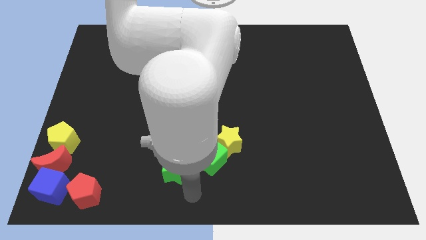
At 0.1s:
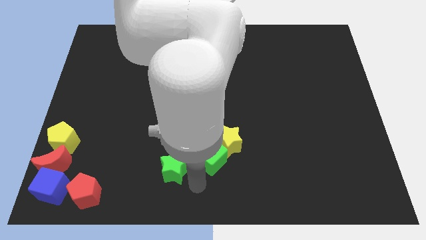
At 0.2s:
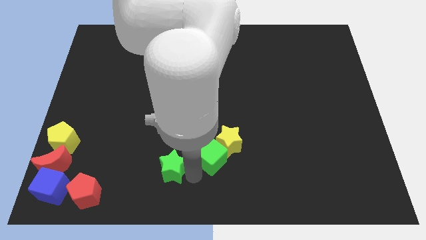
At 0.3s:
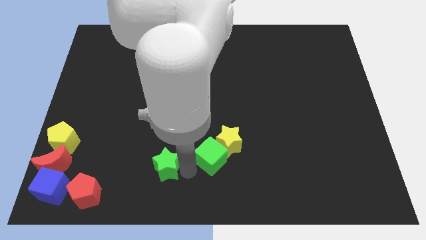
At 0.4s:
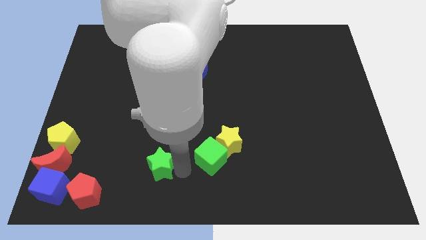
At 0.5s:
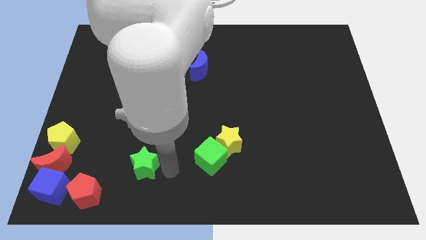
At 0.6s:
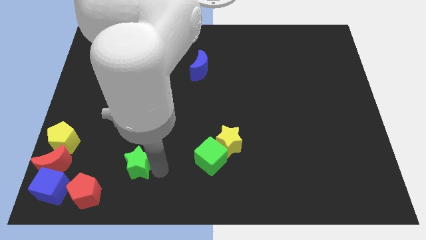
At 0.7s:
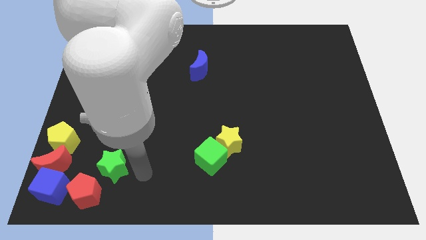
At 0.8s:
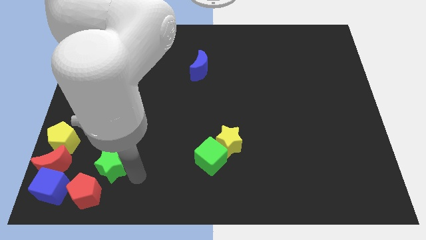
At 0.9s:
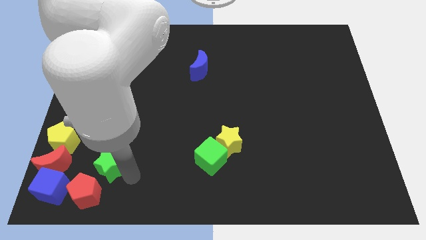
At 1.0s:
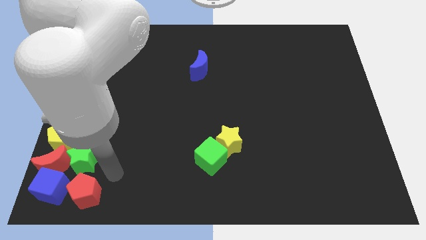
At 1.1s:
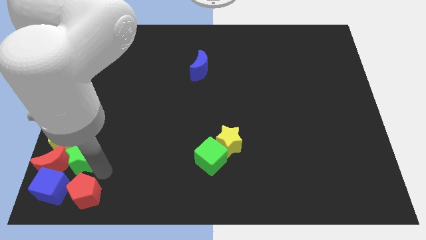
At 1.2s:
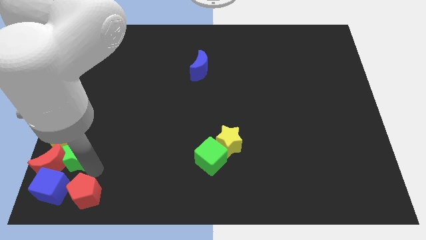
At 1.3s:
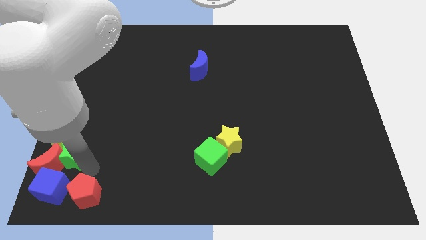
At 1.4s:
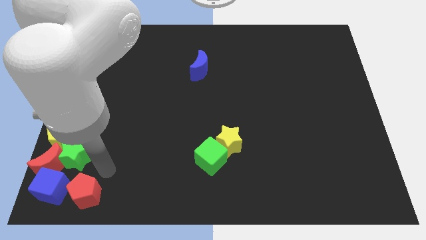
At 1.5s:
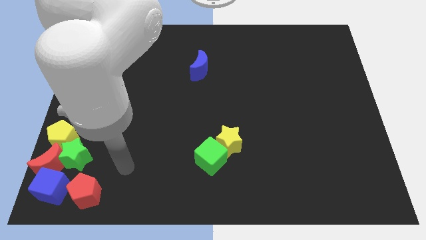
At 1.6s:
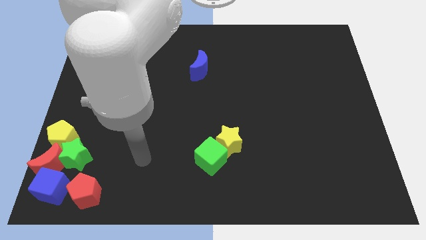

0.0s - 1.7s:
move green star into the red crescent

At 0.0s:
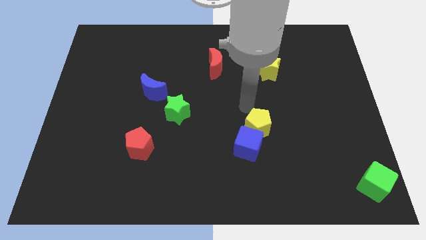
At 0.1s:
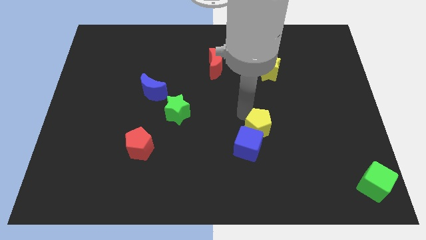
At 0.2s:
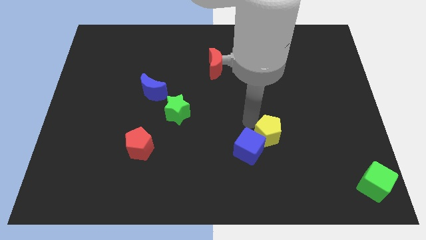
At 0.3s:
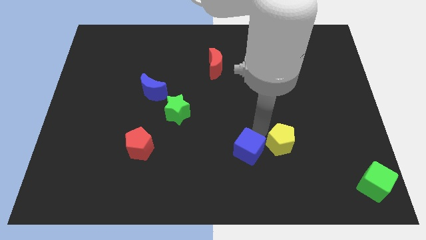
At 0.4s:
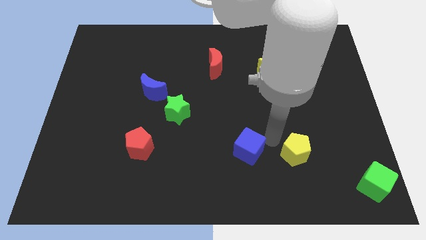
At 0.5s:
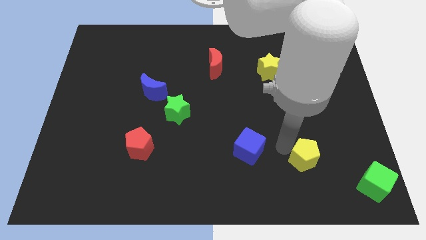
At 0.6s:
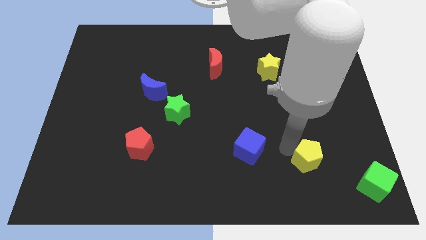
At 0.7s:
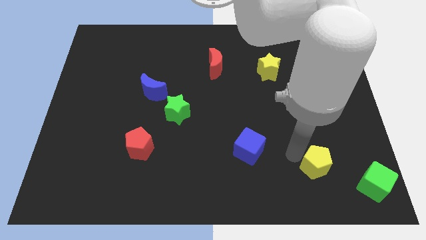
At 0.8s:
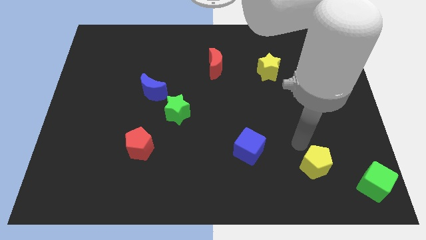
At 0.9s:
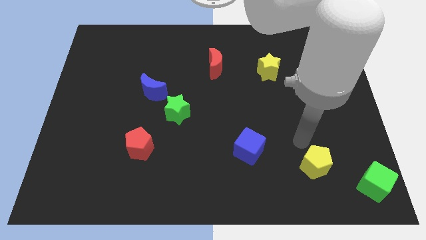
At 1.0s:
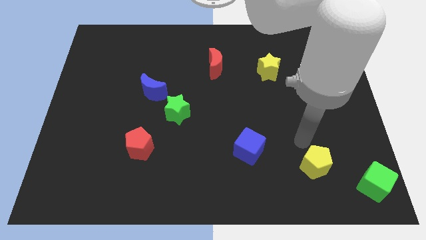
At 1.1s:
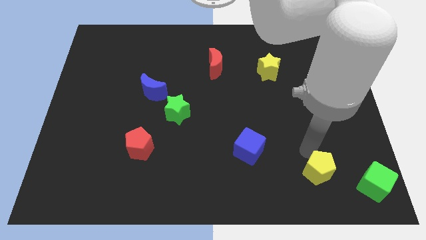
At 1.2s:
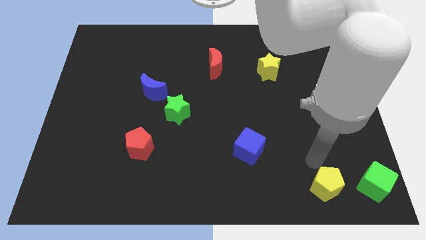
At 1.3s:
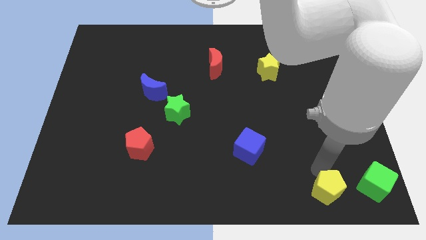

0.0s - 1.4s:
separate yellow pentagon from the blue cube

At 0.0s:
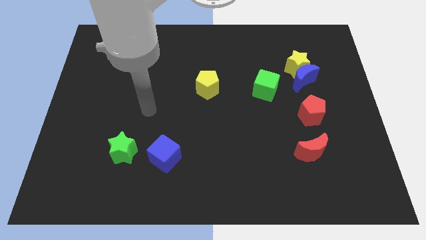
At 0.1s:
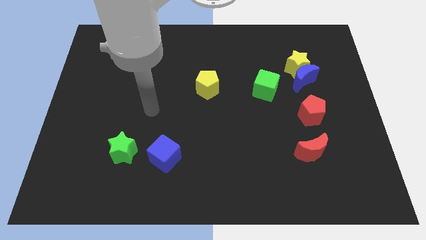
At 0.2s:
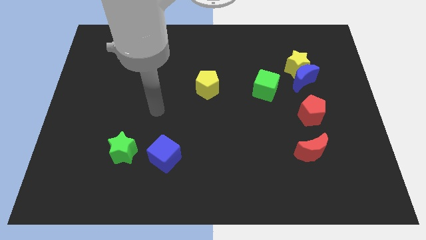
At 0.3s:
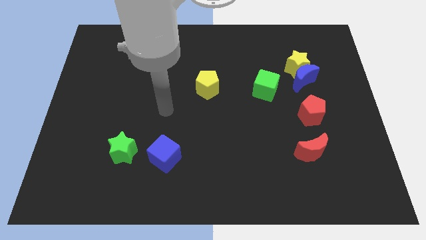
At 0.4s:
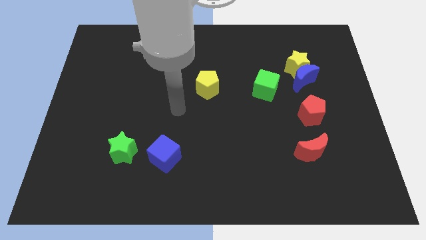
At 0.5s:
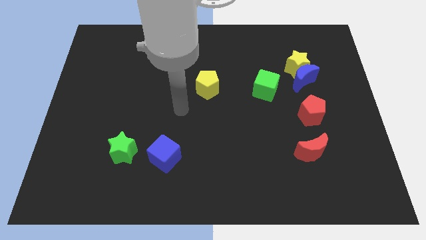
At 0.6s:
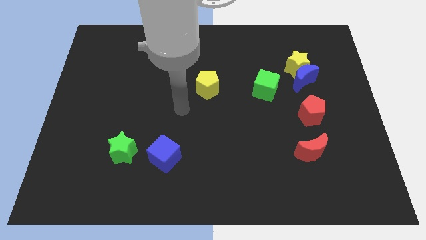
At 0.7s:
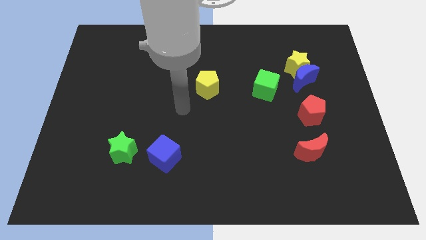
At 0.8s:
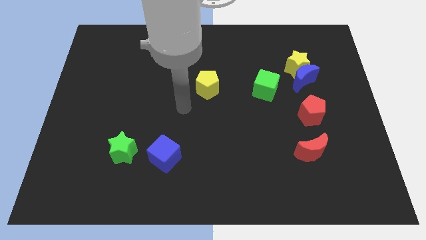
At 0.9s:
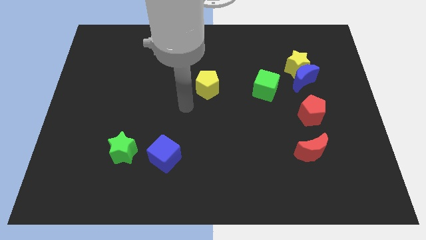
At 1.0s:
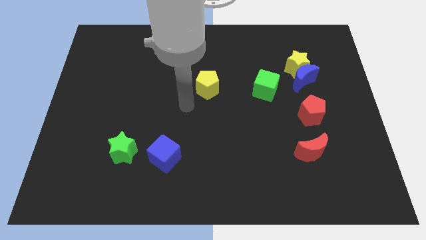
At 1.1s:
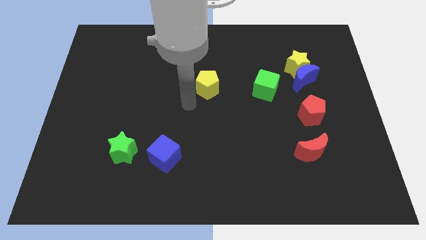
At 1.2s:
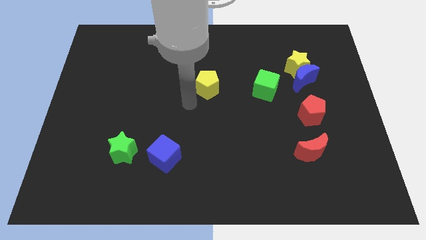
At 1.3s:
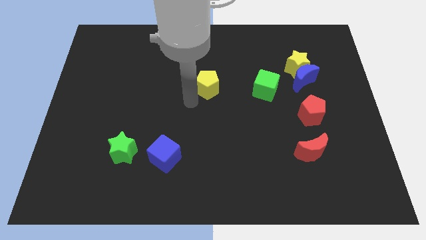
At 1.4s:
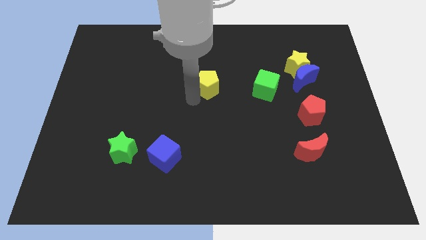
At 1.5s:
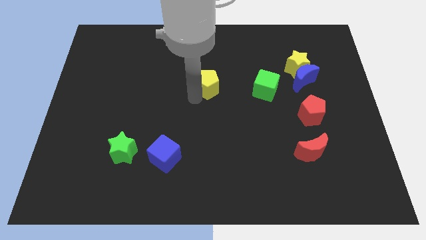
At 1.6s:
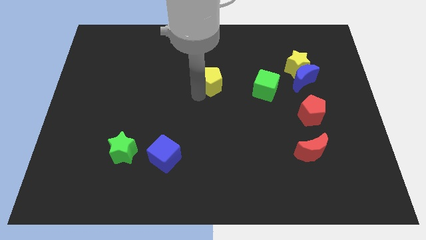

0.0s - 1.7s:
move the arm towards the yellow pentagon

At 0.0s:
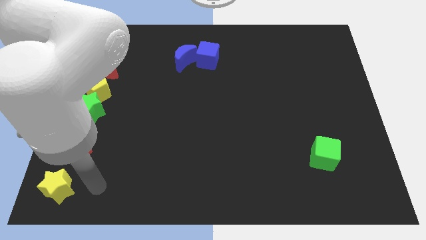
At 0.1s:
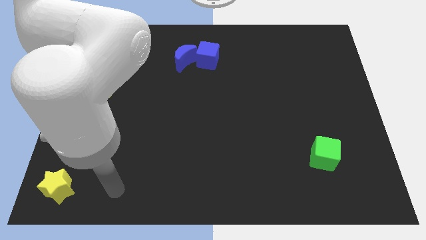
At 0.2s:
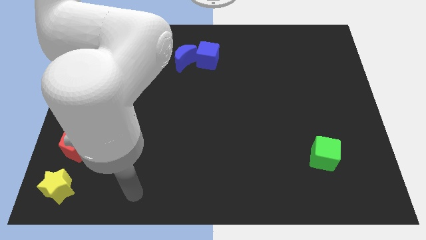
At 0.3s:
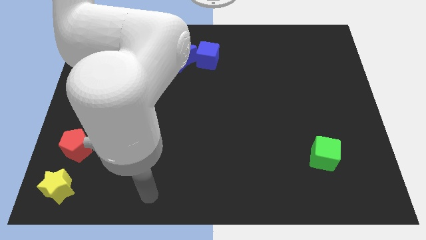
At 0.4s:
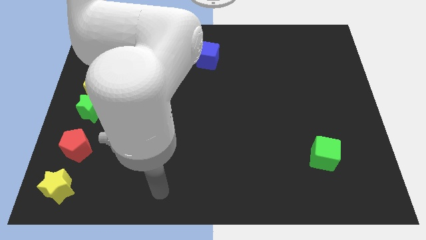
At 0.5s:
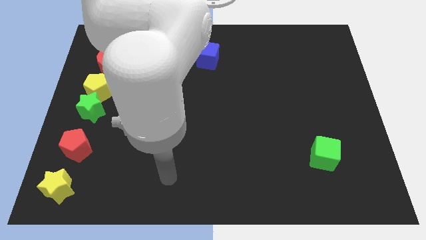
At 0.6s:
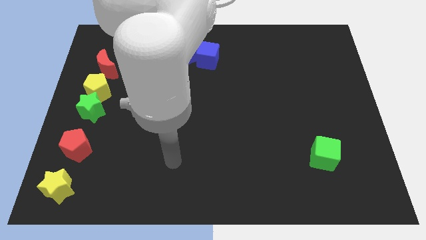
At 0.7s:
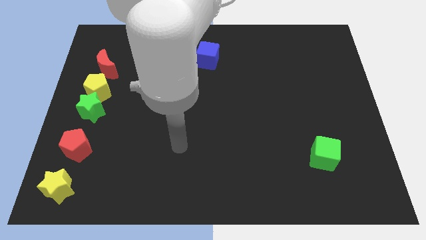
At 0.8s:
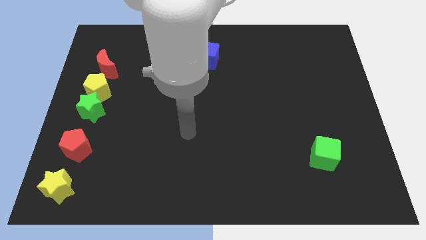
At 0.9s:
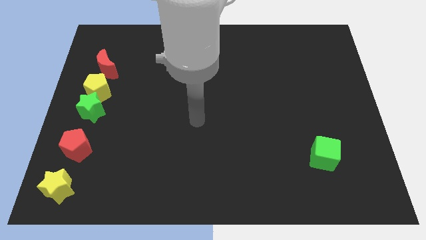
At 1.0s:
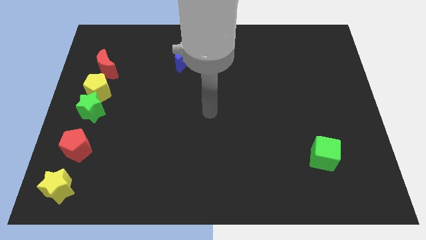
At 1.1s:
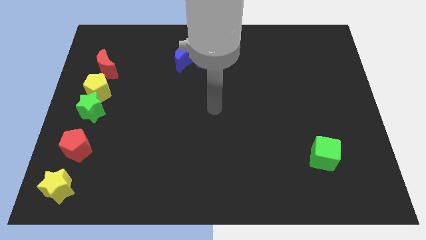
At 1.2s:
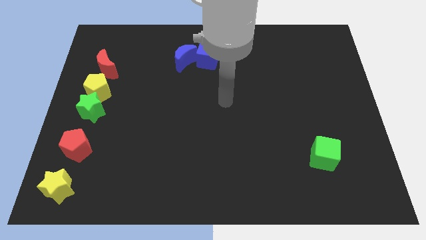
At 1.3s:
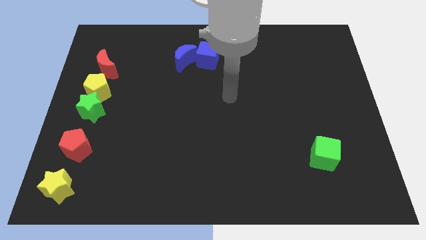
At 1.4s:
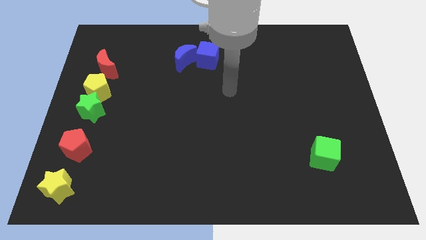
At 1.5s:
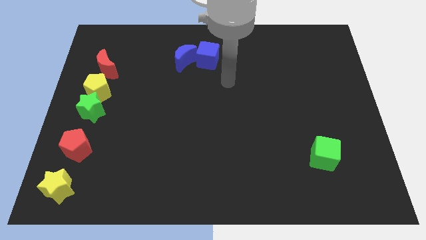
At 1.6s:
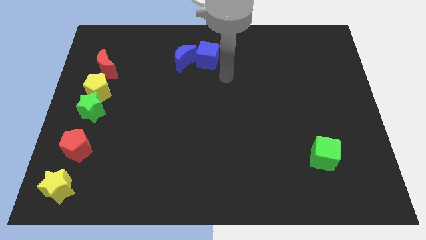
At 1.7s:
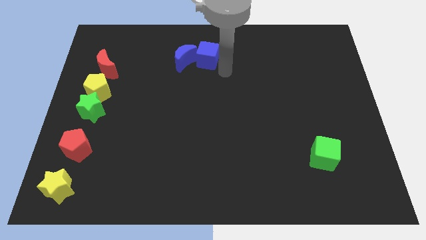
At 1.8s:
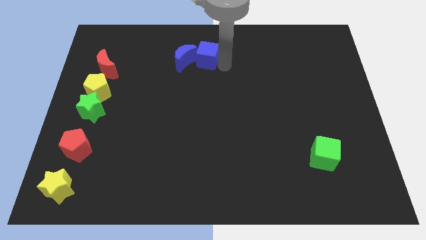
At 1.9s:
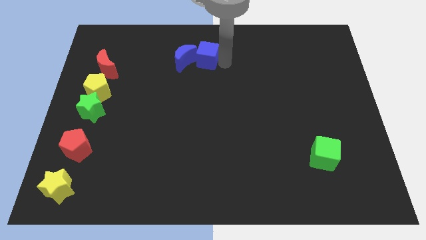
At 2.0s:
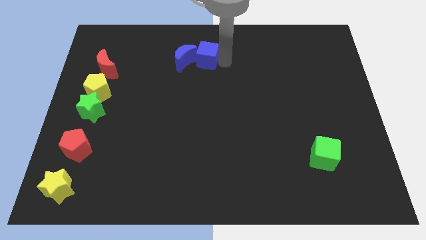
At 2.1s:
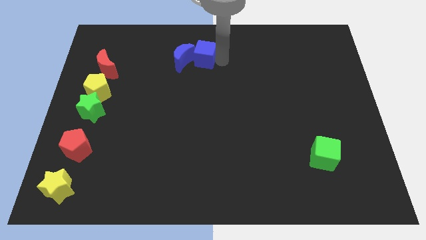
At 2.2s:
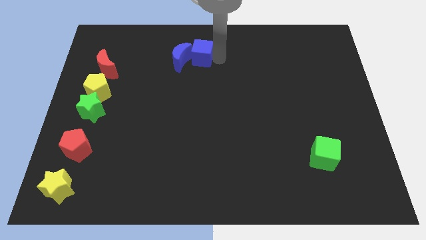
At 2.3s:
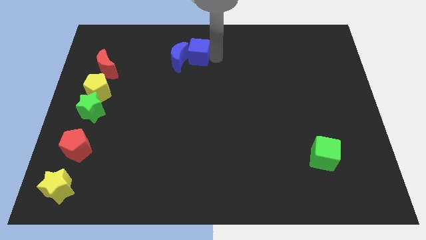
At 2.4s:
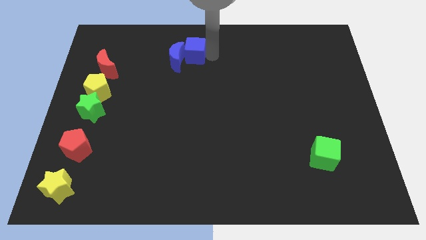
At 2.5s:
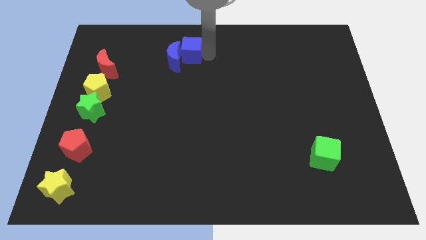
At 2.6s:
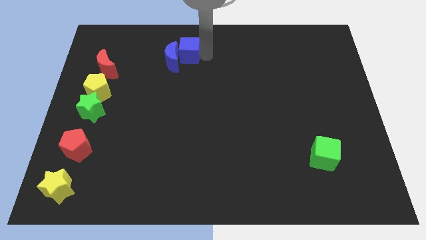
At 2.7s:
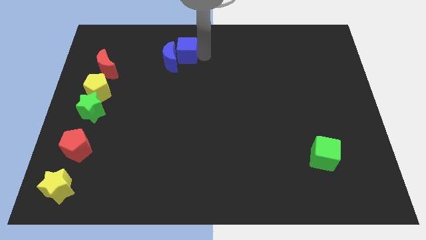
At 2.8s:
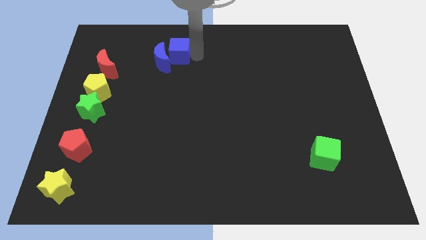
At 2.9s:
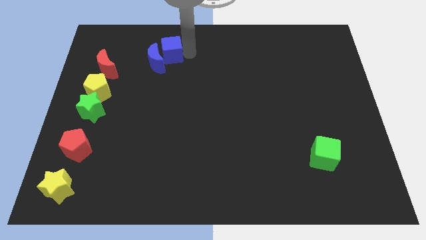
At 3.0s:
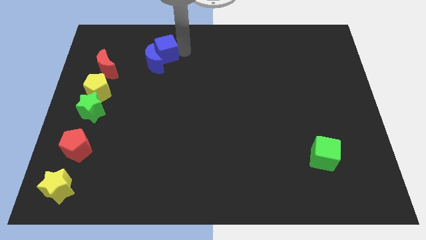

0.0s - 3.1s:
move the blue blocks together slightly to the left

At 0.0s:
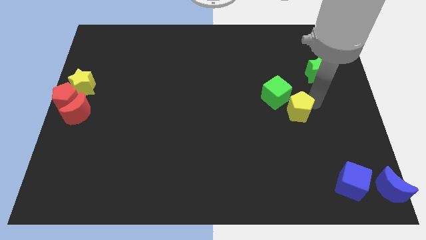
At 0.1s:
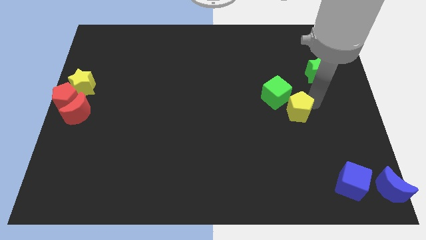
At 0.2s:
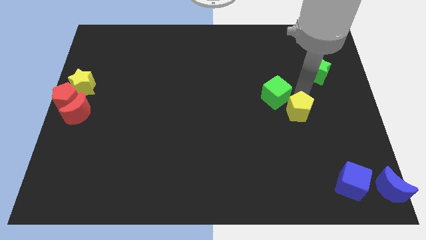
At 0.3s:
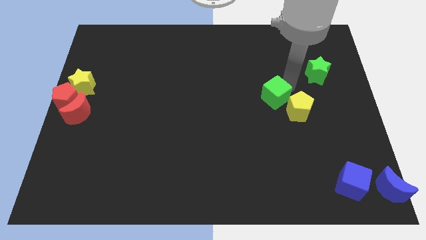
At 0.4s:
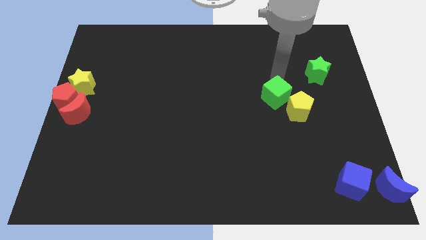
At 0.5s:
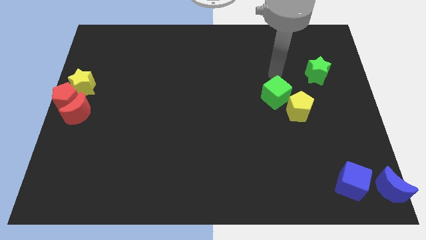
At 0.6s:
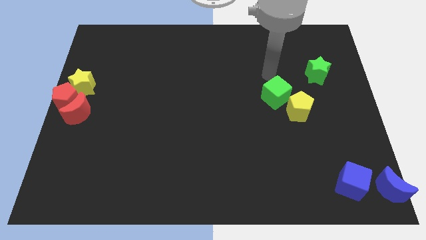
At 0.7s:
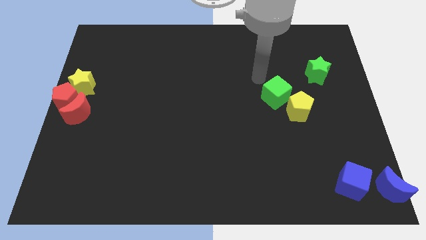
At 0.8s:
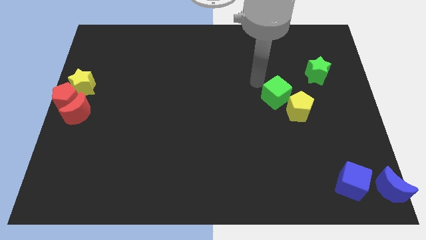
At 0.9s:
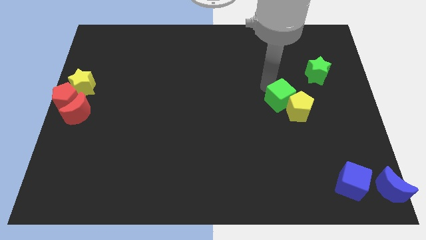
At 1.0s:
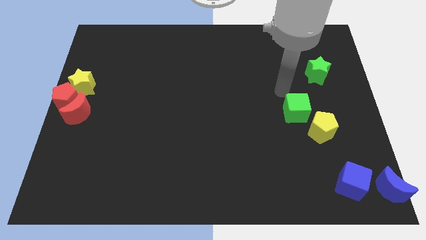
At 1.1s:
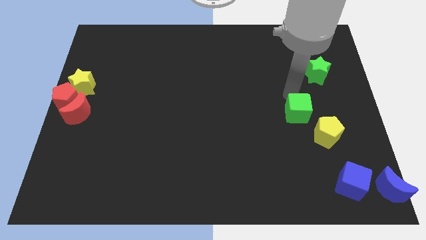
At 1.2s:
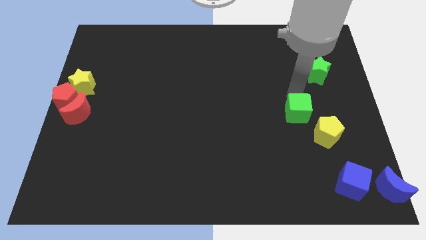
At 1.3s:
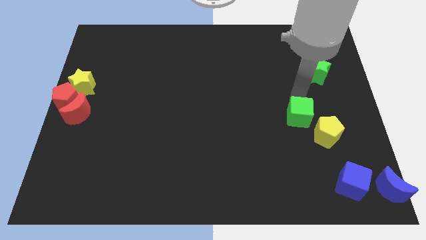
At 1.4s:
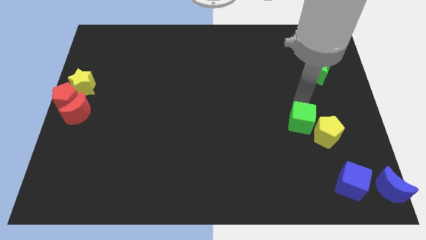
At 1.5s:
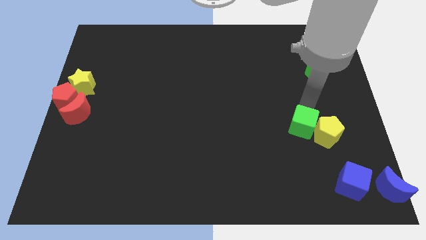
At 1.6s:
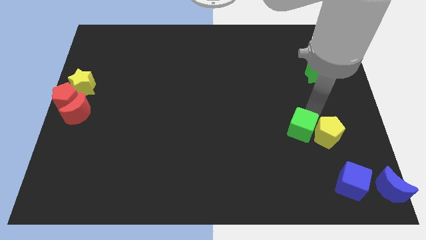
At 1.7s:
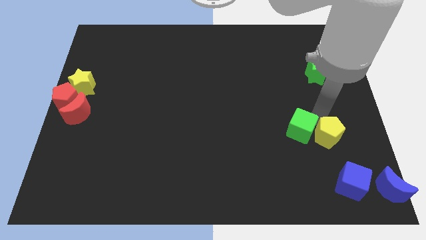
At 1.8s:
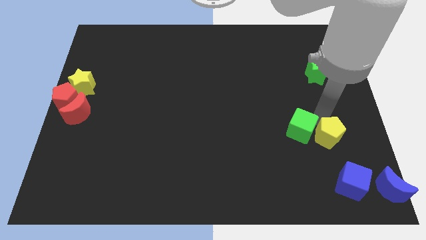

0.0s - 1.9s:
push the yellow pentagon with the green cube towards the blue cube
